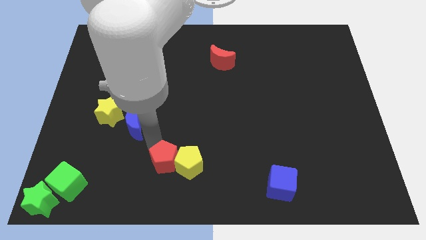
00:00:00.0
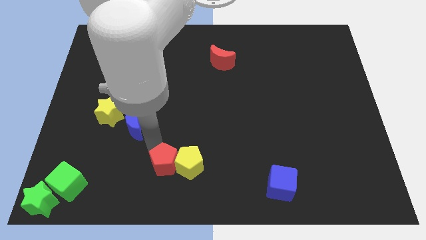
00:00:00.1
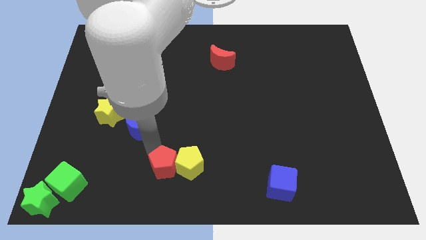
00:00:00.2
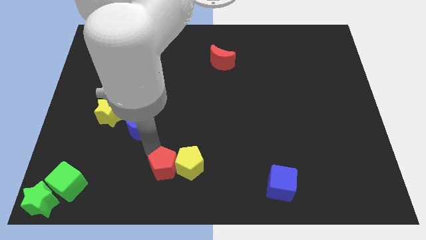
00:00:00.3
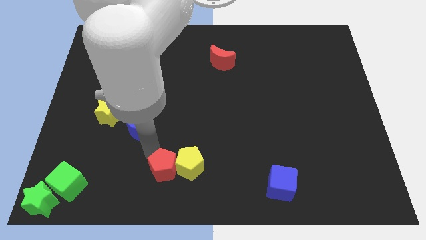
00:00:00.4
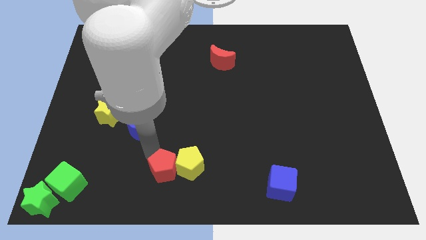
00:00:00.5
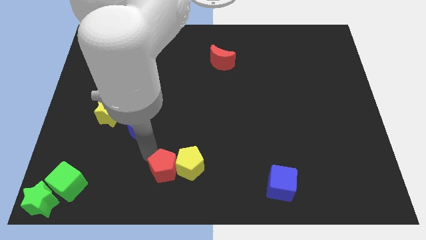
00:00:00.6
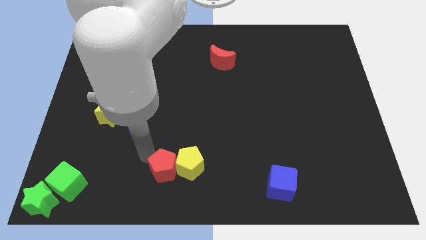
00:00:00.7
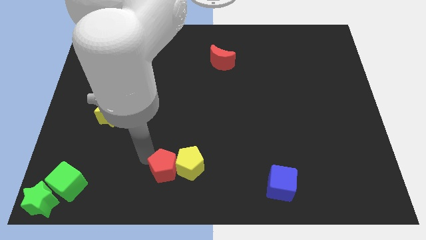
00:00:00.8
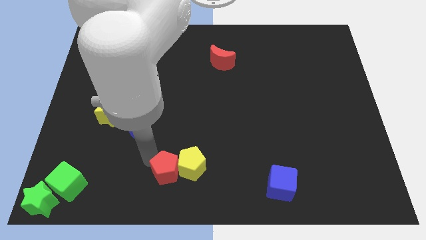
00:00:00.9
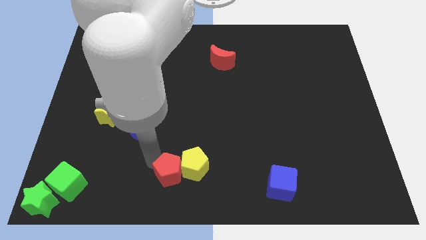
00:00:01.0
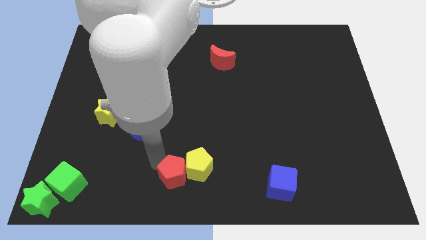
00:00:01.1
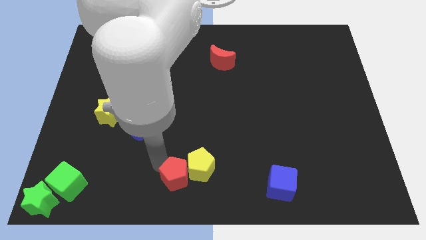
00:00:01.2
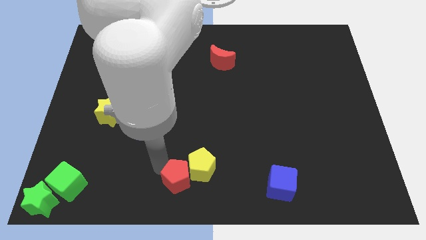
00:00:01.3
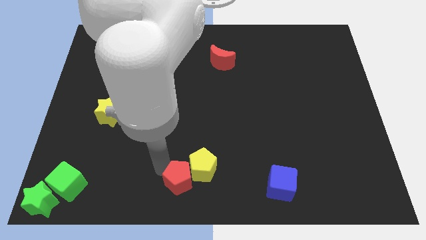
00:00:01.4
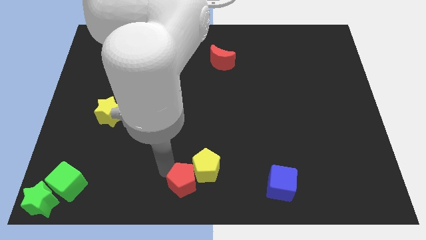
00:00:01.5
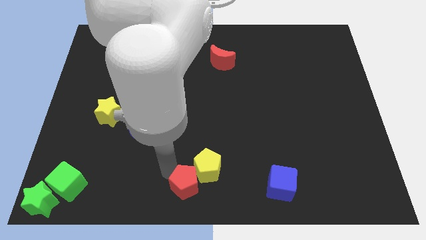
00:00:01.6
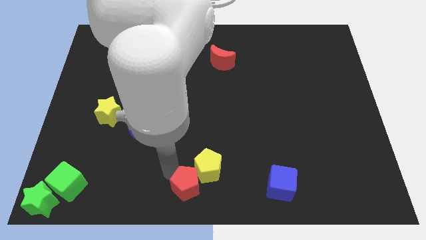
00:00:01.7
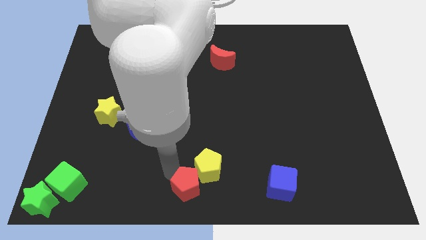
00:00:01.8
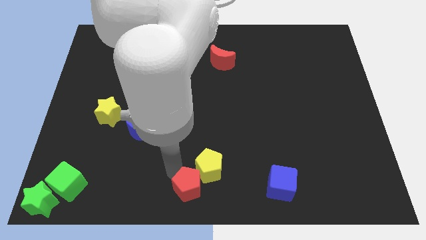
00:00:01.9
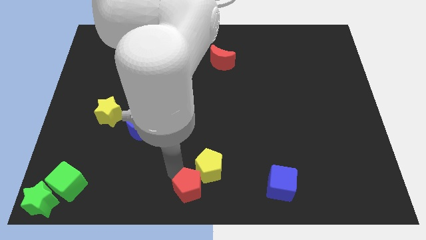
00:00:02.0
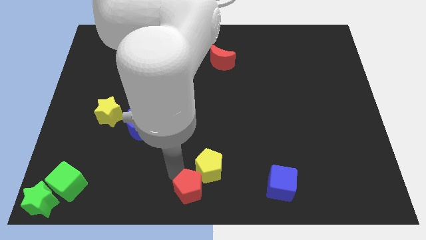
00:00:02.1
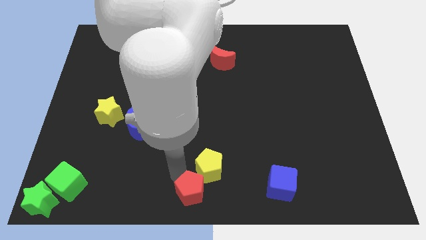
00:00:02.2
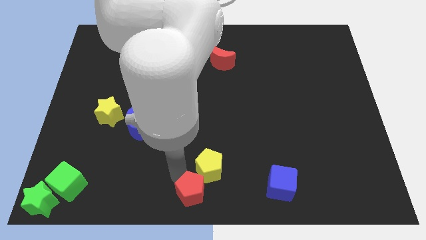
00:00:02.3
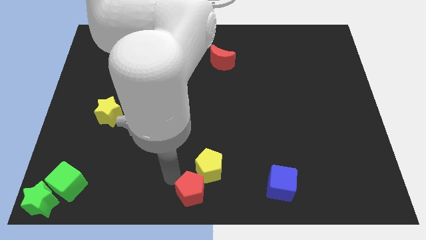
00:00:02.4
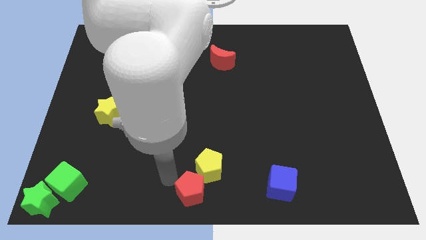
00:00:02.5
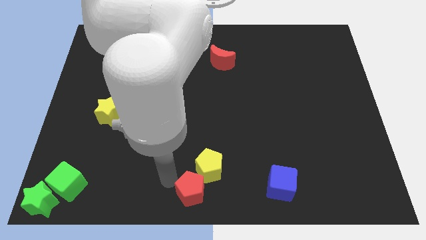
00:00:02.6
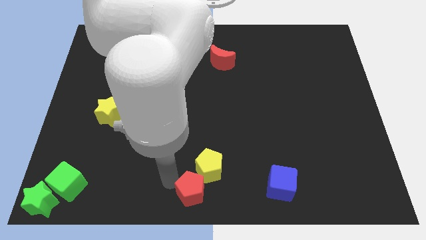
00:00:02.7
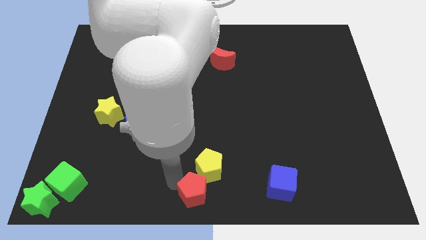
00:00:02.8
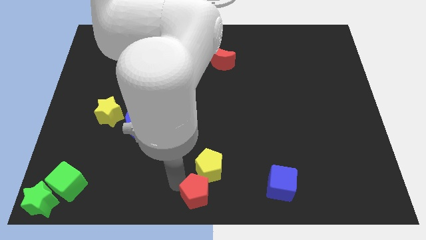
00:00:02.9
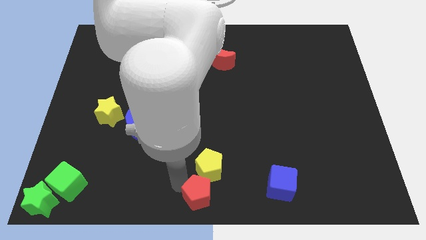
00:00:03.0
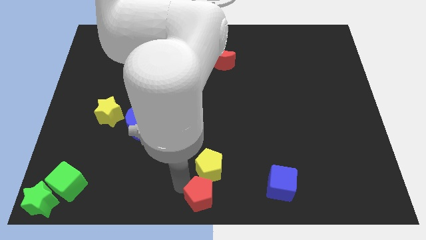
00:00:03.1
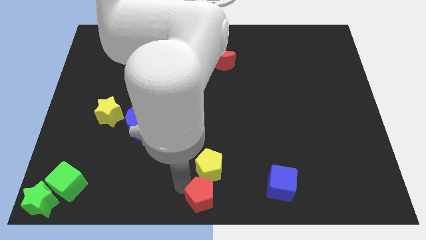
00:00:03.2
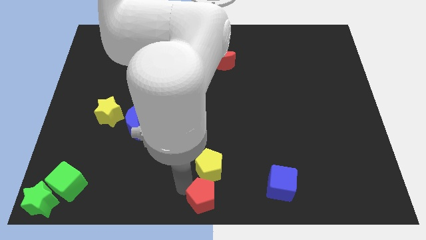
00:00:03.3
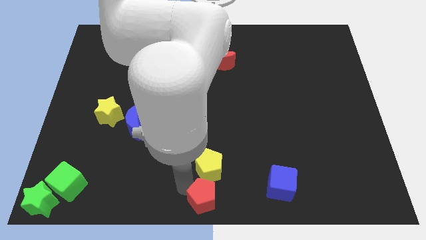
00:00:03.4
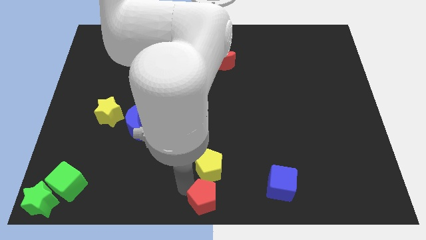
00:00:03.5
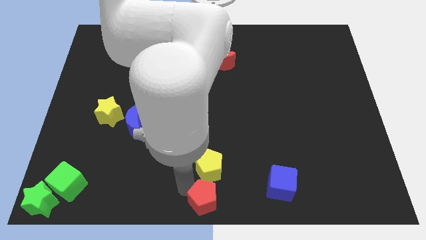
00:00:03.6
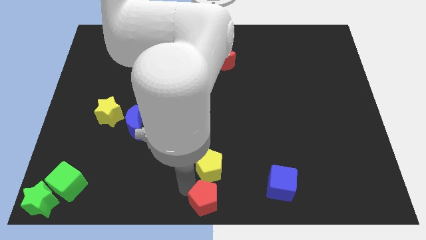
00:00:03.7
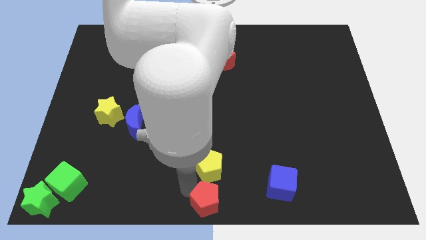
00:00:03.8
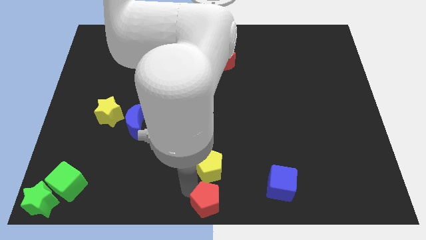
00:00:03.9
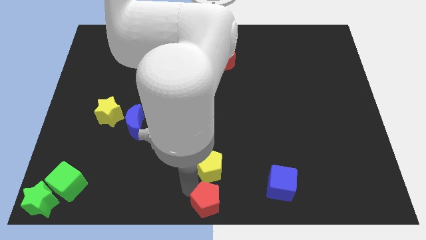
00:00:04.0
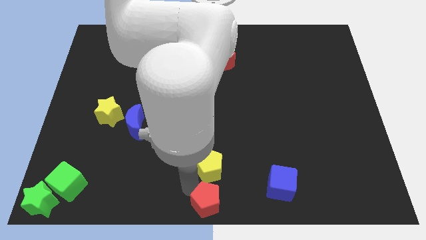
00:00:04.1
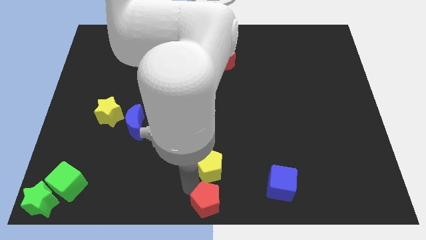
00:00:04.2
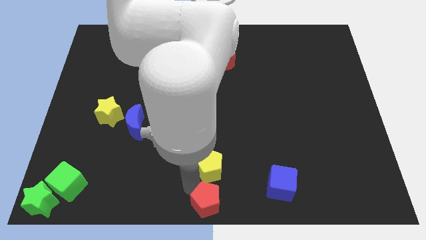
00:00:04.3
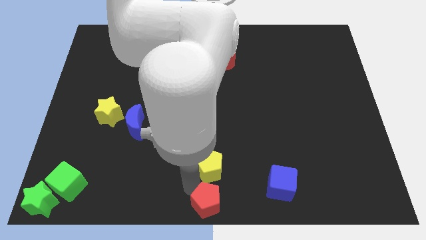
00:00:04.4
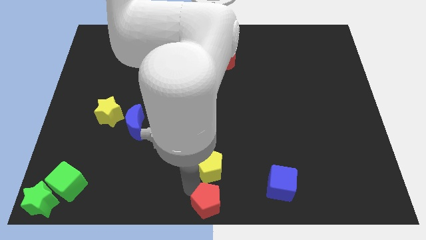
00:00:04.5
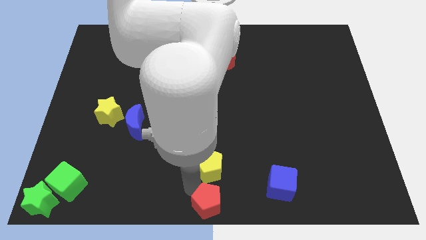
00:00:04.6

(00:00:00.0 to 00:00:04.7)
push the red pentagon to the bottom center of the board

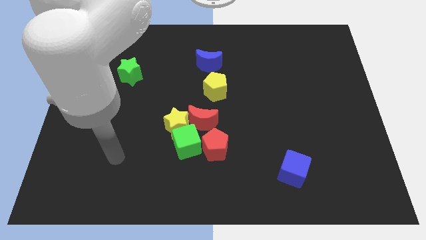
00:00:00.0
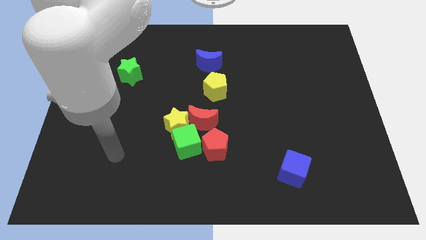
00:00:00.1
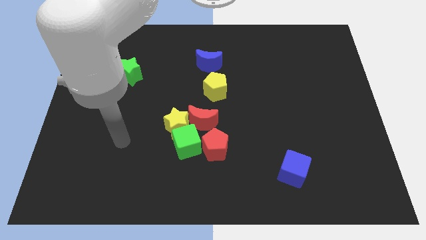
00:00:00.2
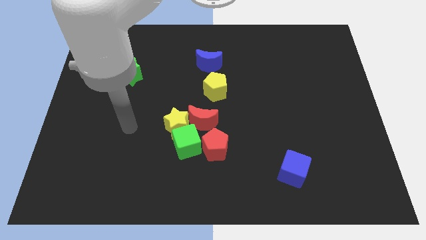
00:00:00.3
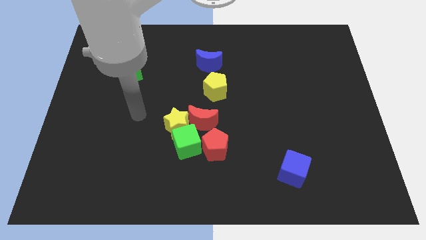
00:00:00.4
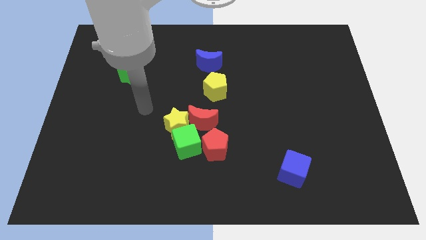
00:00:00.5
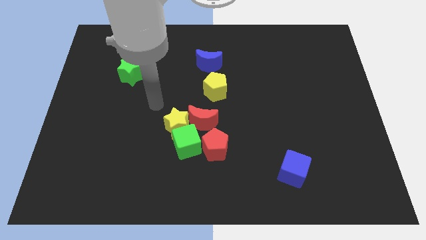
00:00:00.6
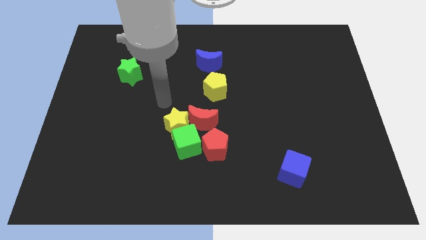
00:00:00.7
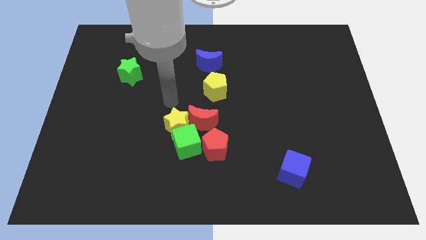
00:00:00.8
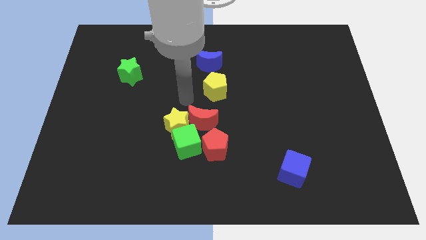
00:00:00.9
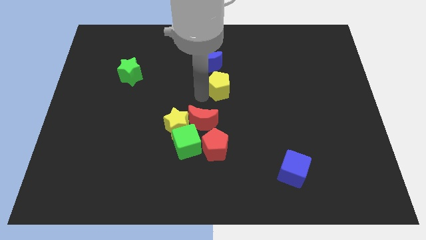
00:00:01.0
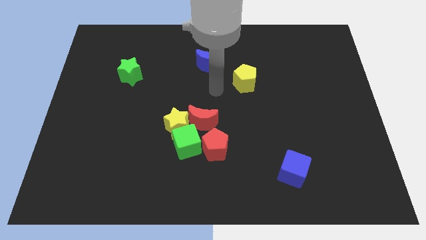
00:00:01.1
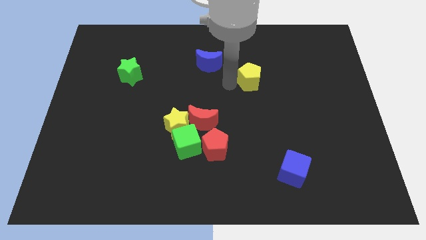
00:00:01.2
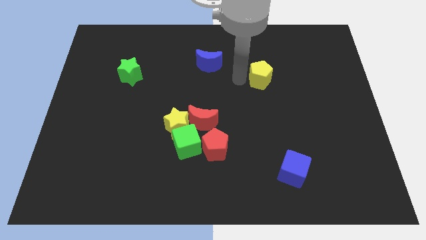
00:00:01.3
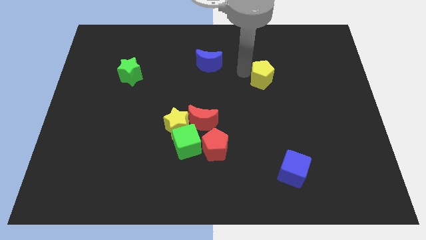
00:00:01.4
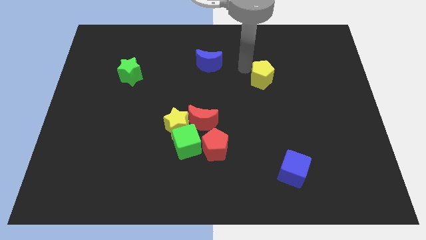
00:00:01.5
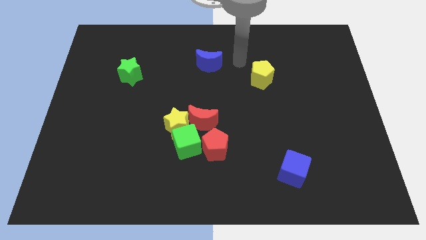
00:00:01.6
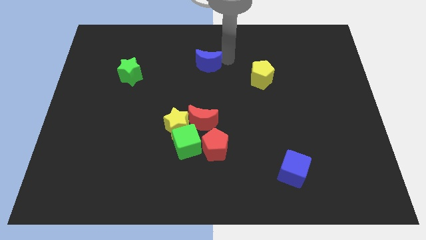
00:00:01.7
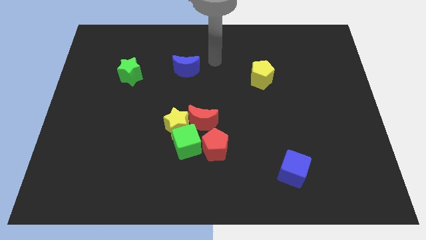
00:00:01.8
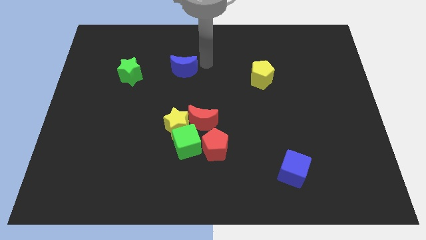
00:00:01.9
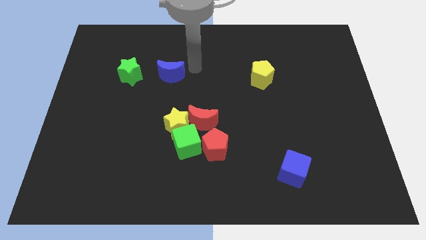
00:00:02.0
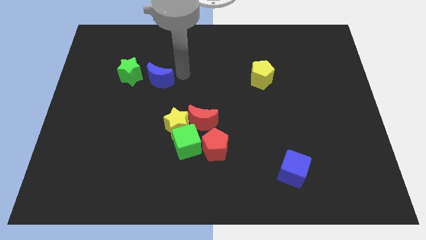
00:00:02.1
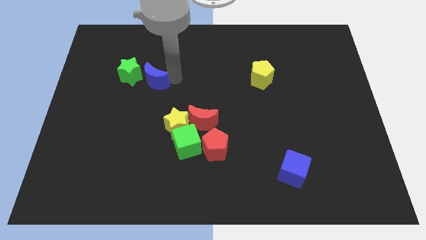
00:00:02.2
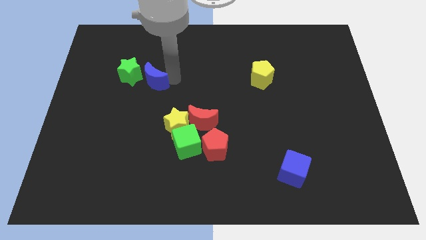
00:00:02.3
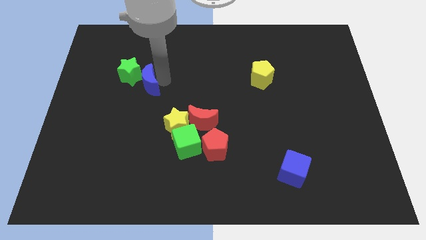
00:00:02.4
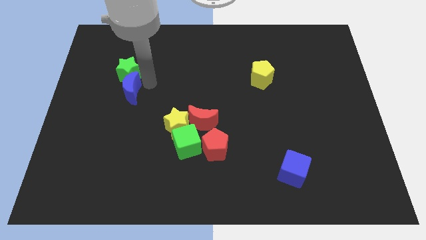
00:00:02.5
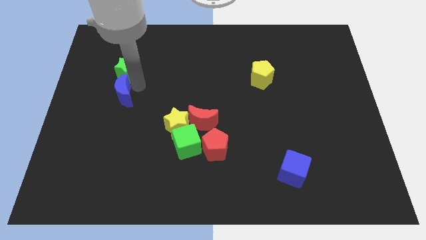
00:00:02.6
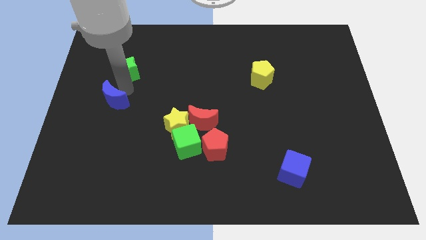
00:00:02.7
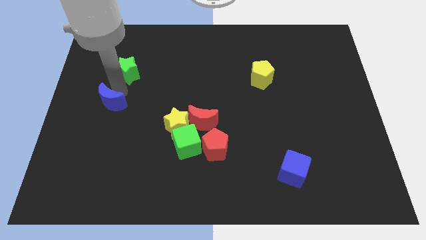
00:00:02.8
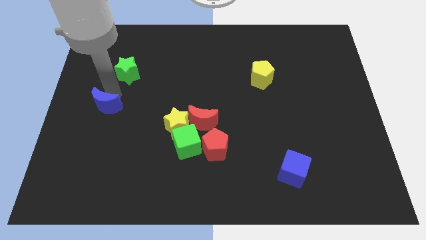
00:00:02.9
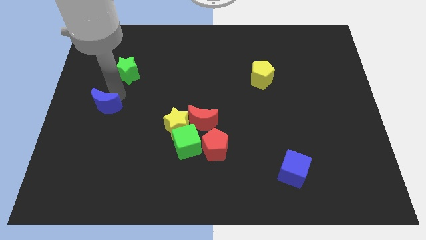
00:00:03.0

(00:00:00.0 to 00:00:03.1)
separate yellow pentagon and blue moon

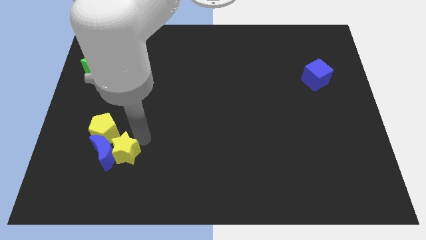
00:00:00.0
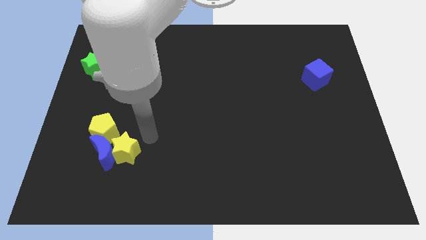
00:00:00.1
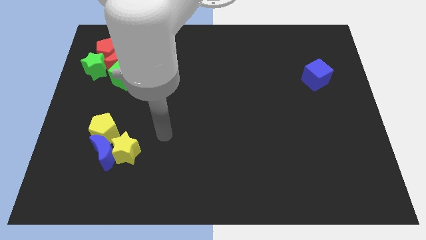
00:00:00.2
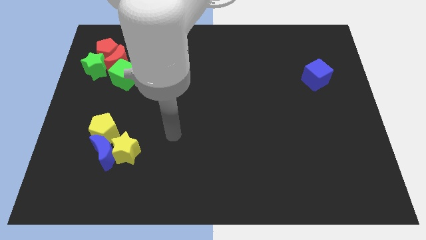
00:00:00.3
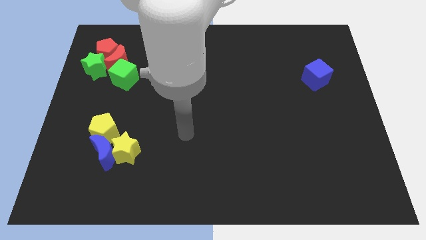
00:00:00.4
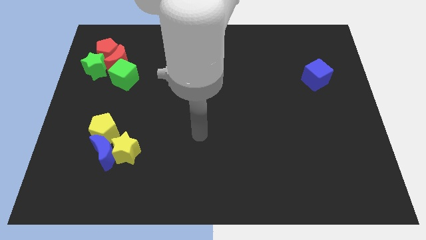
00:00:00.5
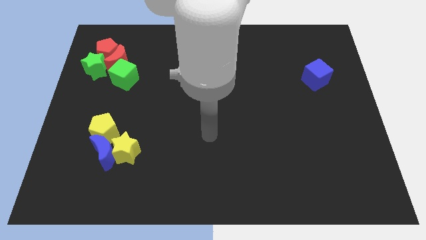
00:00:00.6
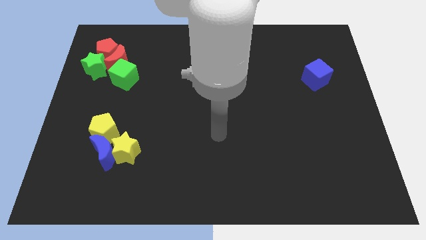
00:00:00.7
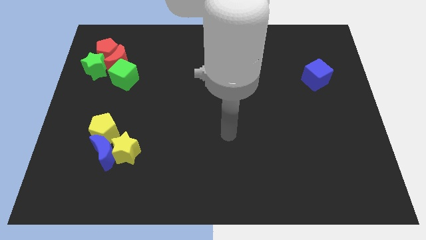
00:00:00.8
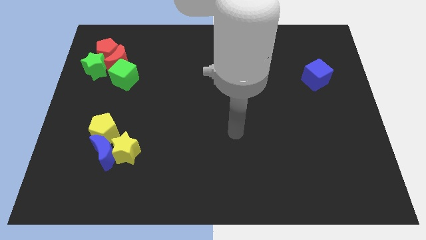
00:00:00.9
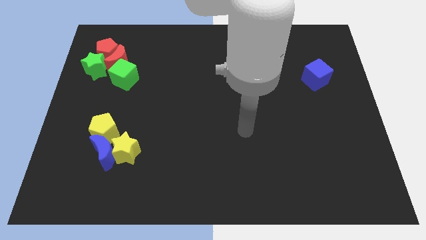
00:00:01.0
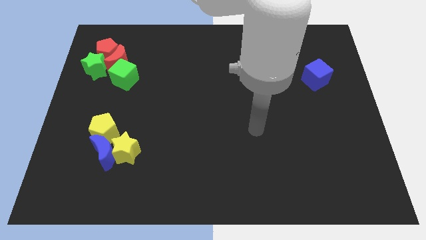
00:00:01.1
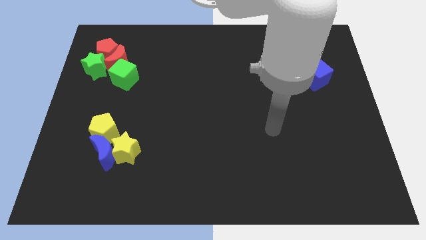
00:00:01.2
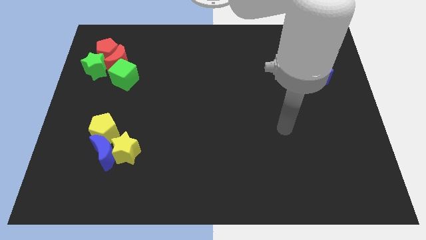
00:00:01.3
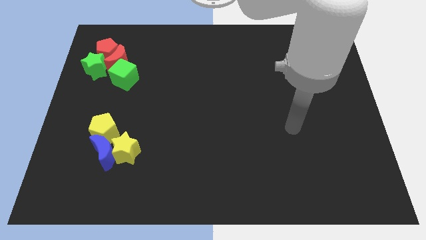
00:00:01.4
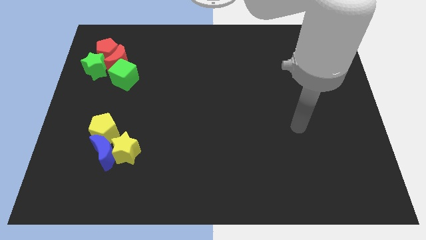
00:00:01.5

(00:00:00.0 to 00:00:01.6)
go to the right side of the board
